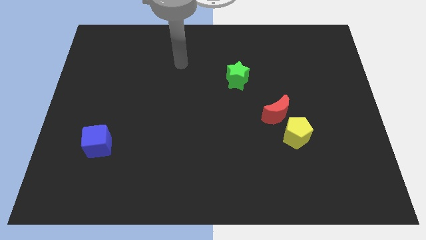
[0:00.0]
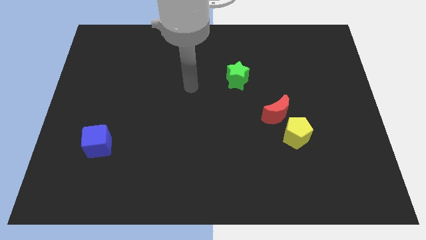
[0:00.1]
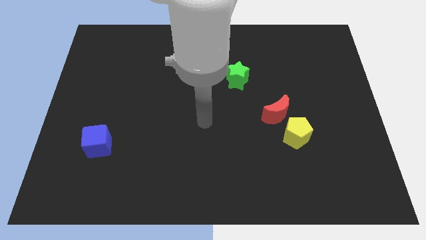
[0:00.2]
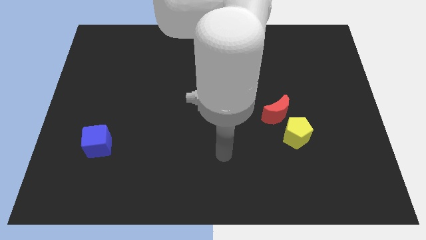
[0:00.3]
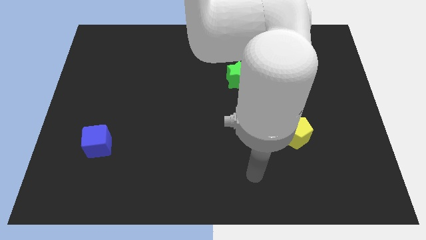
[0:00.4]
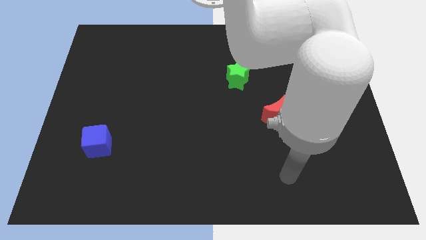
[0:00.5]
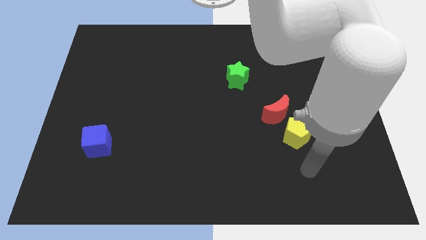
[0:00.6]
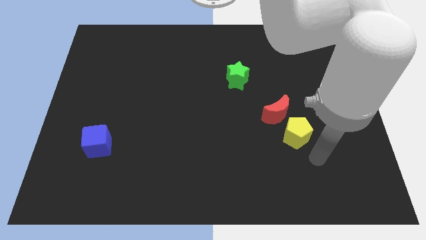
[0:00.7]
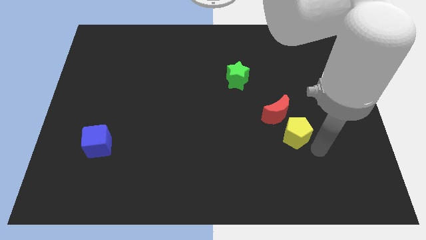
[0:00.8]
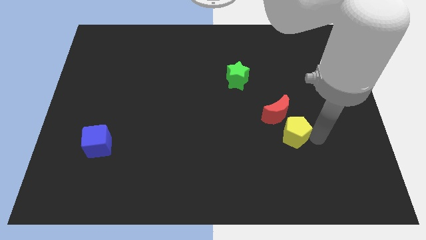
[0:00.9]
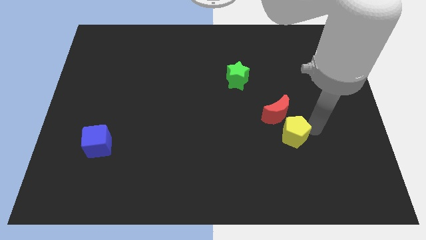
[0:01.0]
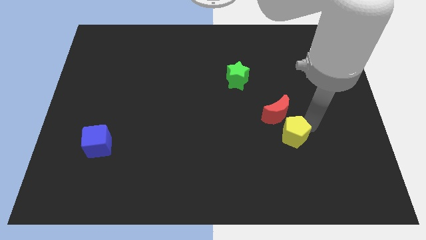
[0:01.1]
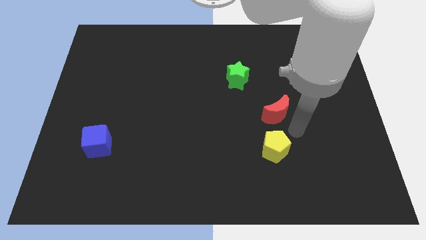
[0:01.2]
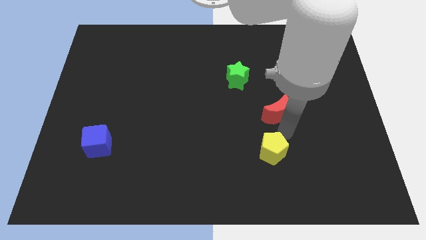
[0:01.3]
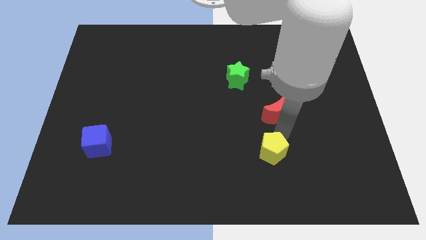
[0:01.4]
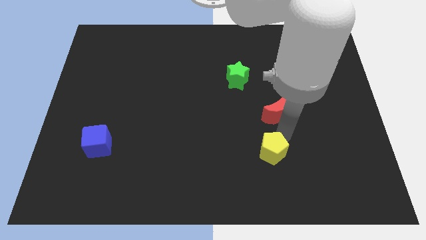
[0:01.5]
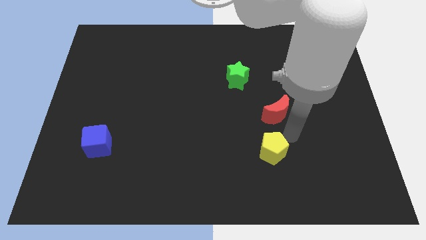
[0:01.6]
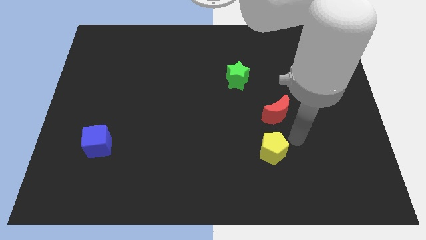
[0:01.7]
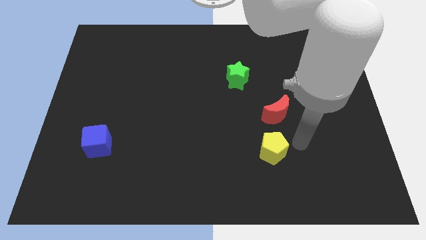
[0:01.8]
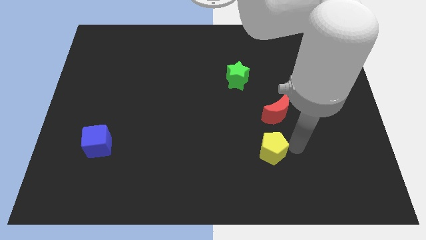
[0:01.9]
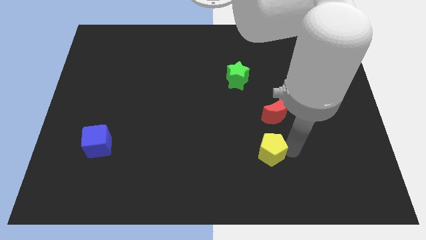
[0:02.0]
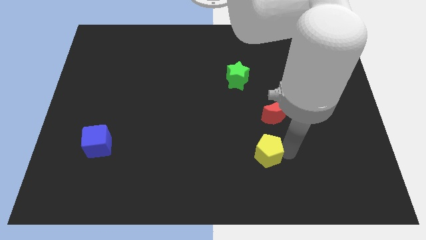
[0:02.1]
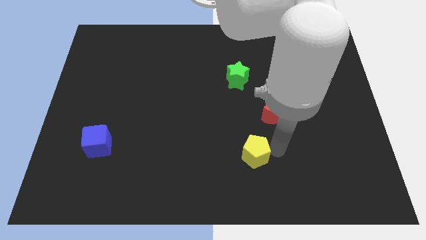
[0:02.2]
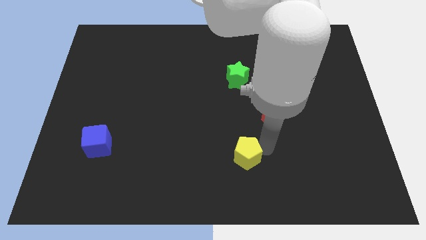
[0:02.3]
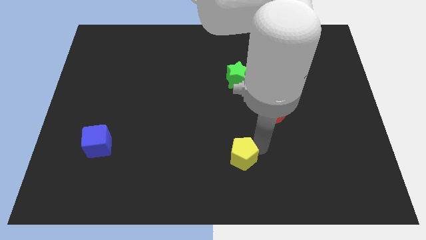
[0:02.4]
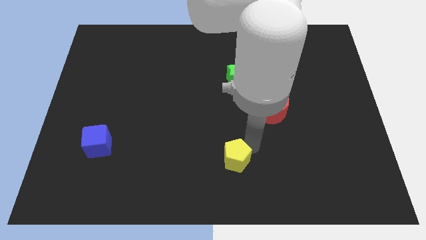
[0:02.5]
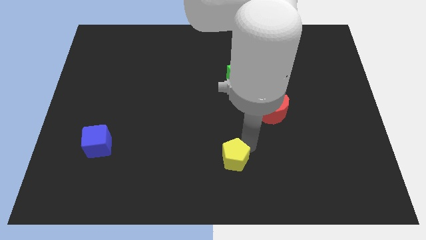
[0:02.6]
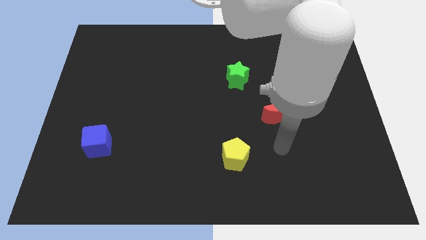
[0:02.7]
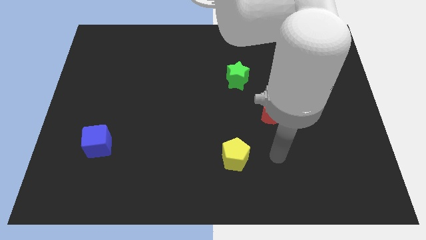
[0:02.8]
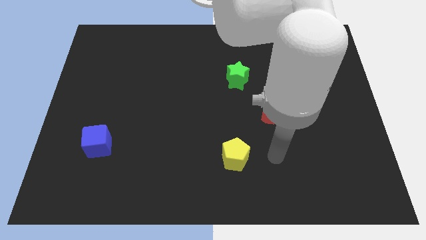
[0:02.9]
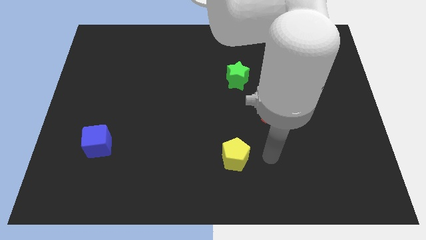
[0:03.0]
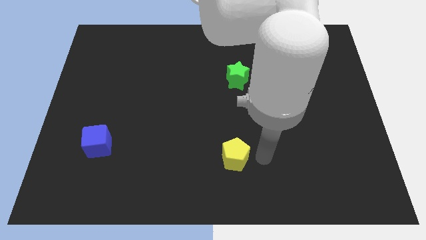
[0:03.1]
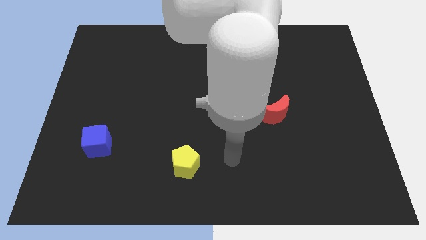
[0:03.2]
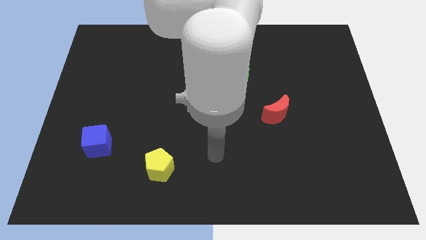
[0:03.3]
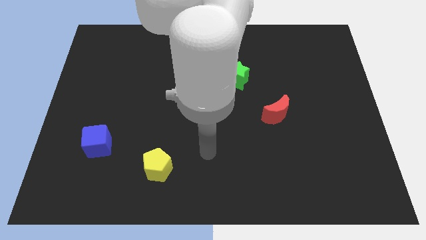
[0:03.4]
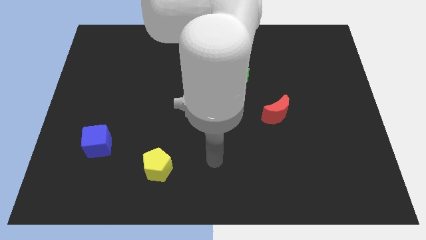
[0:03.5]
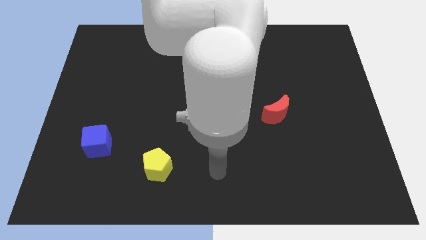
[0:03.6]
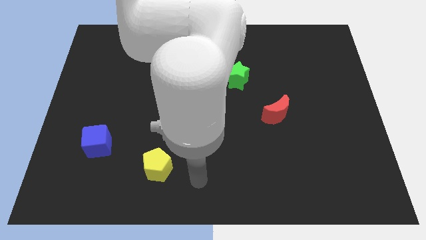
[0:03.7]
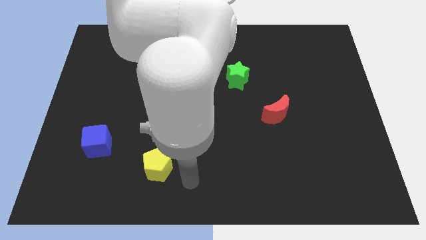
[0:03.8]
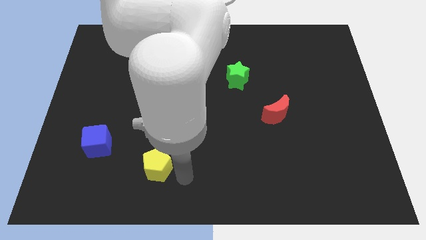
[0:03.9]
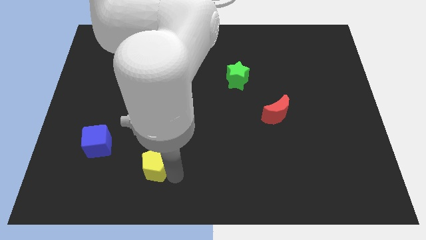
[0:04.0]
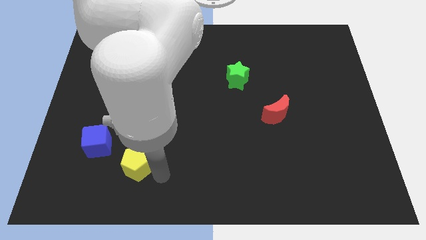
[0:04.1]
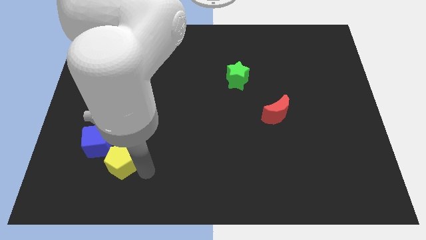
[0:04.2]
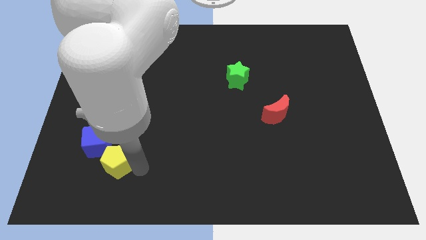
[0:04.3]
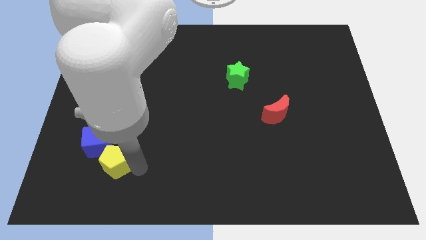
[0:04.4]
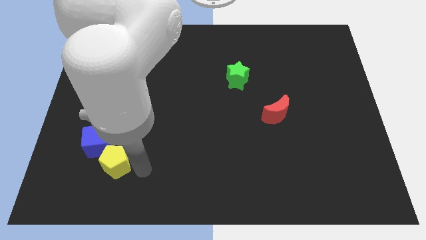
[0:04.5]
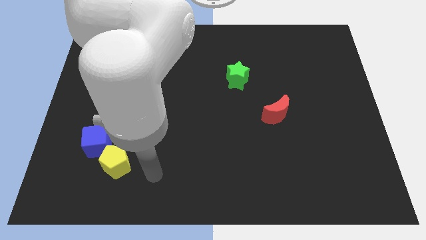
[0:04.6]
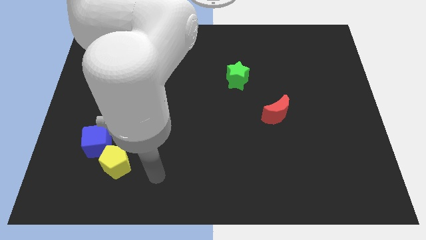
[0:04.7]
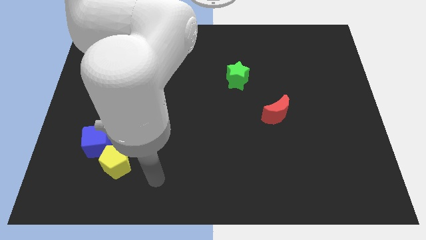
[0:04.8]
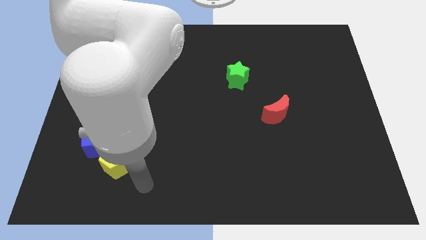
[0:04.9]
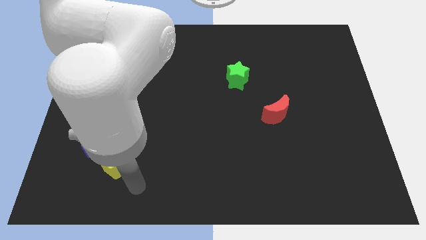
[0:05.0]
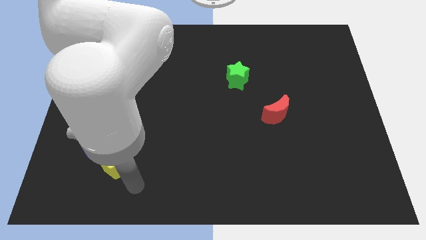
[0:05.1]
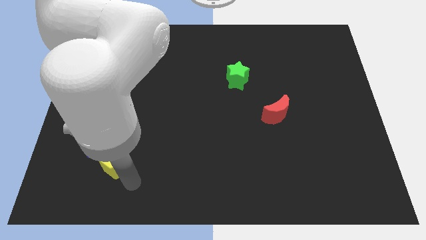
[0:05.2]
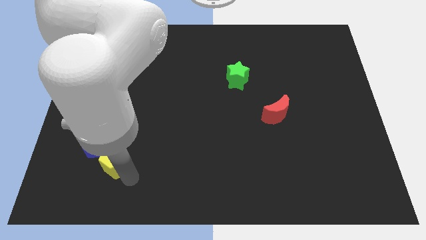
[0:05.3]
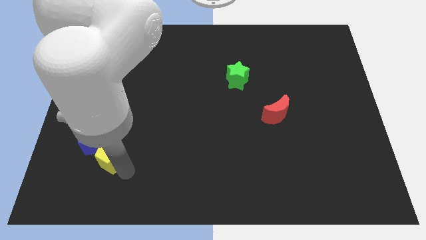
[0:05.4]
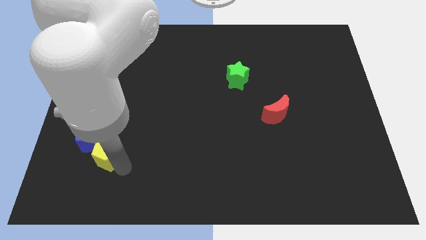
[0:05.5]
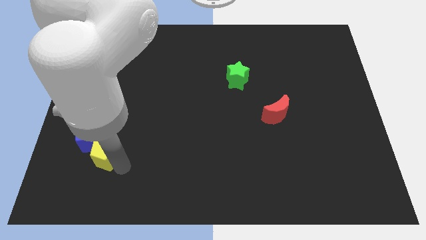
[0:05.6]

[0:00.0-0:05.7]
move the yellow block next to the cube

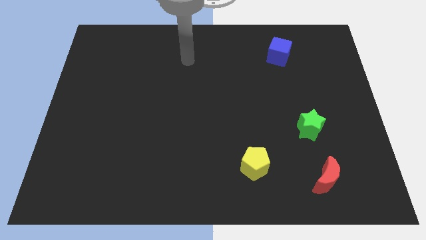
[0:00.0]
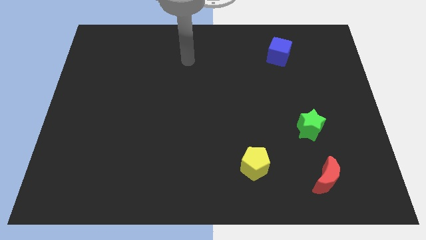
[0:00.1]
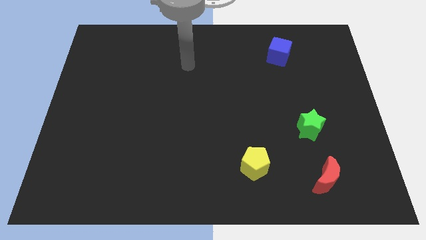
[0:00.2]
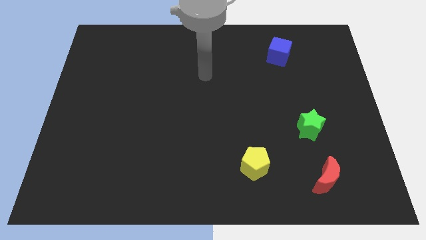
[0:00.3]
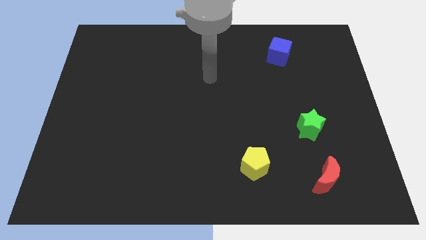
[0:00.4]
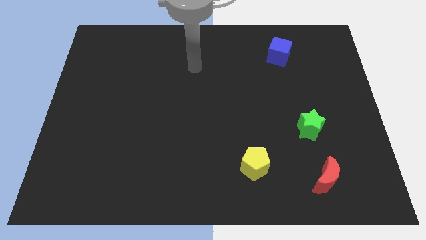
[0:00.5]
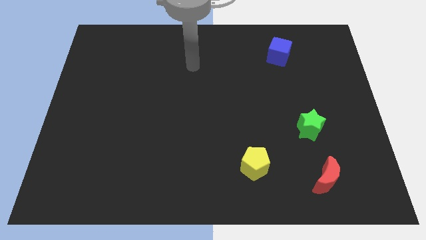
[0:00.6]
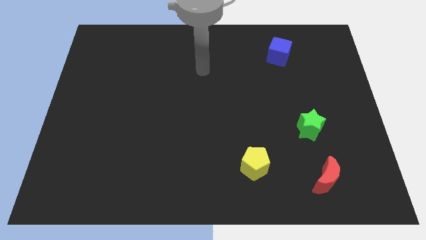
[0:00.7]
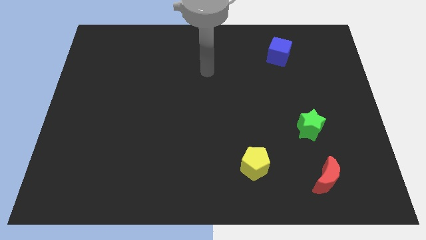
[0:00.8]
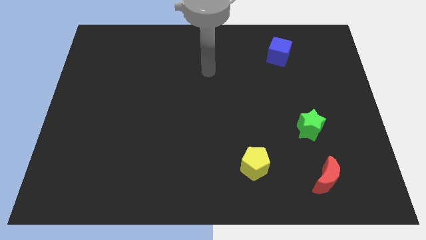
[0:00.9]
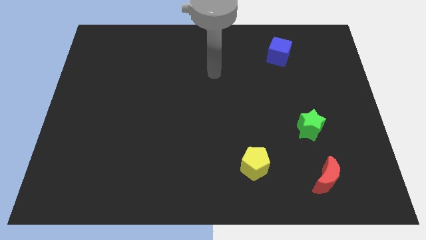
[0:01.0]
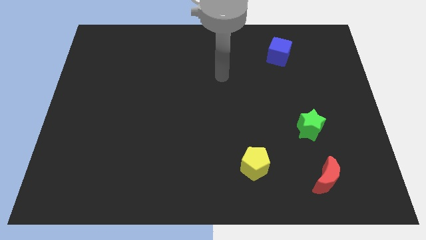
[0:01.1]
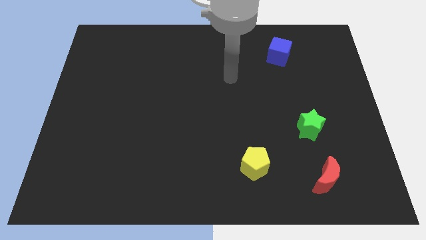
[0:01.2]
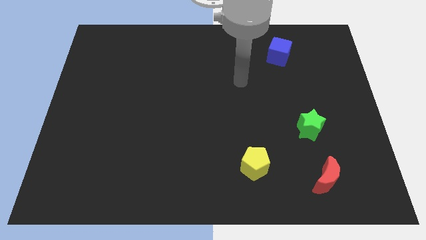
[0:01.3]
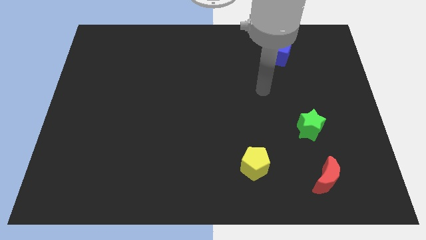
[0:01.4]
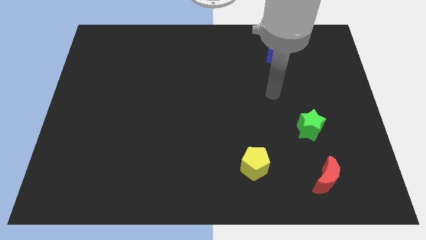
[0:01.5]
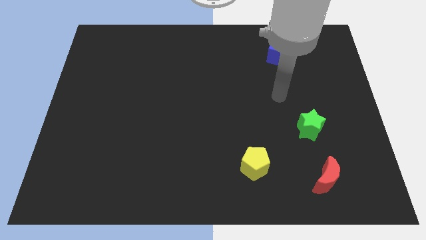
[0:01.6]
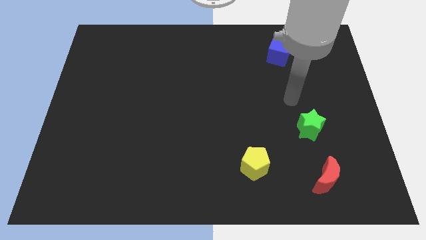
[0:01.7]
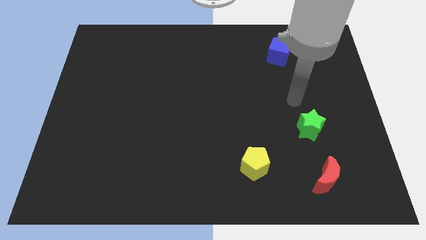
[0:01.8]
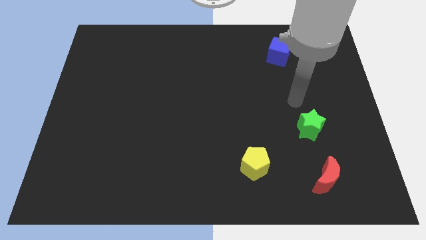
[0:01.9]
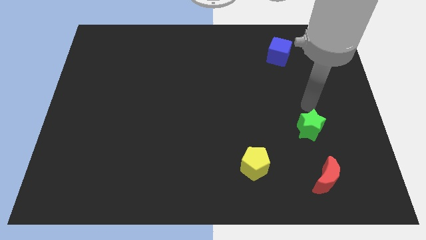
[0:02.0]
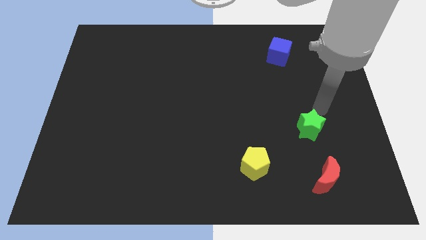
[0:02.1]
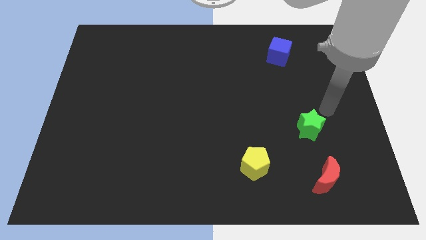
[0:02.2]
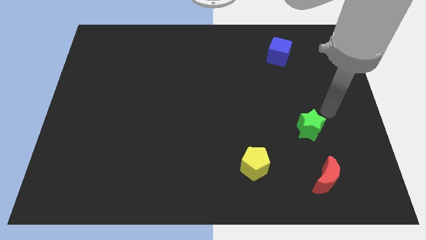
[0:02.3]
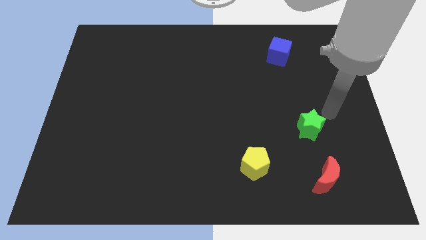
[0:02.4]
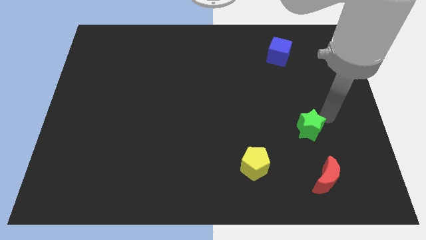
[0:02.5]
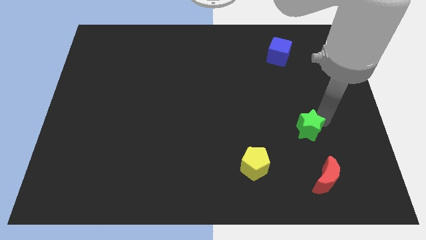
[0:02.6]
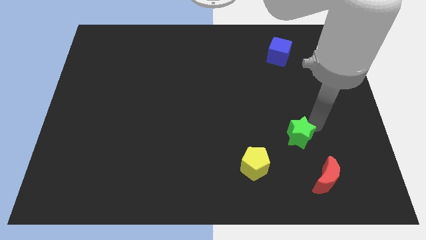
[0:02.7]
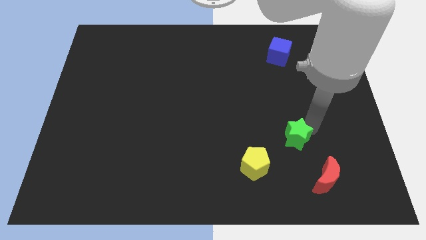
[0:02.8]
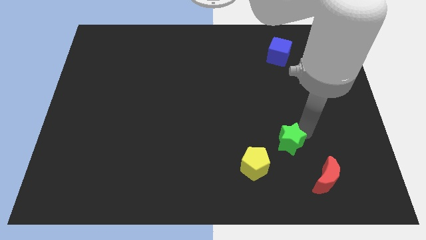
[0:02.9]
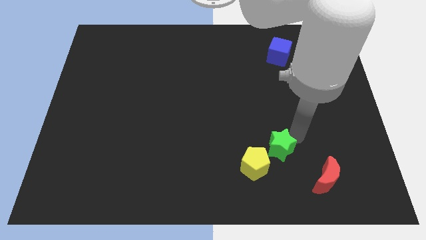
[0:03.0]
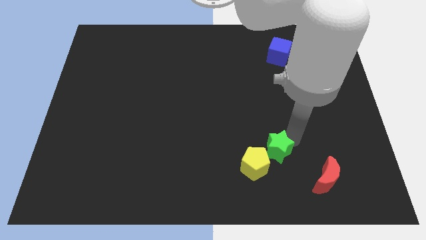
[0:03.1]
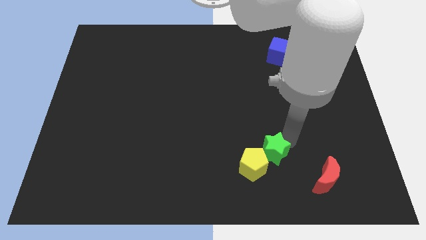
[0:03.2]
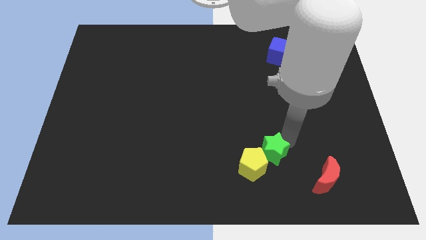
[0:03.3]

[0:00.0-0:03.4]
push the green block towards the yellow pentagon
